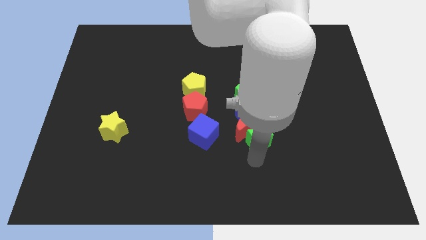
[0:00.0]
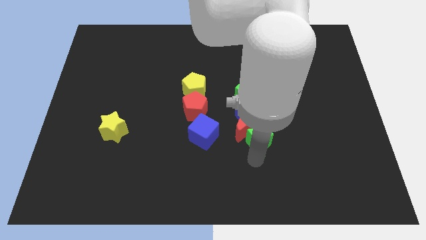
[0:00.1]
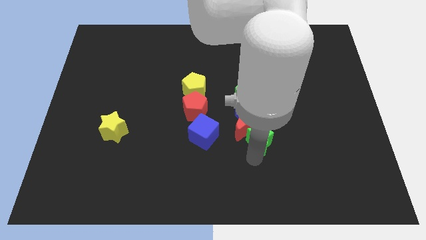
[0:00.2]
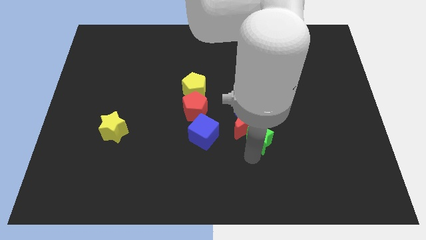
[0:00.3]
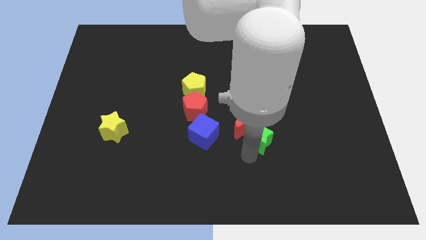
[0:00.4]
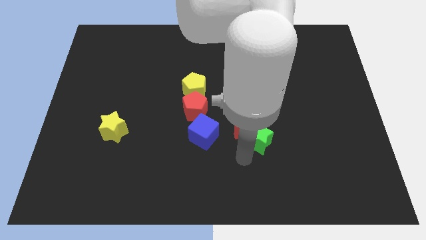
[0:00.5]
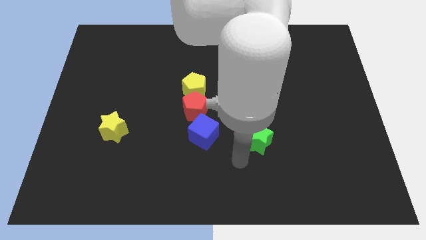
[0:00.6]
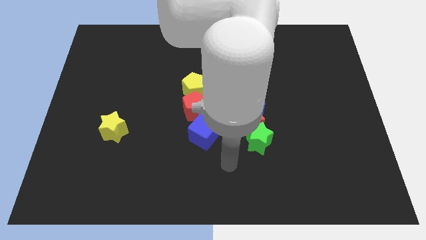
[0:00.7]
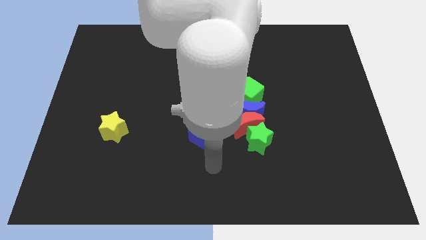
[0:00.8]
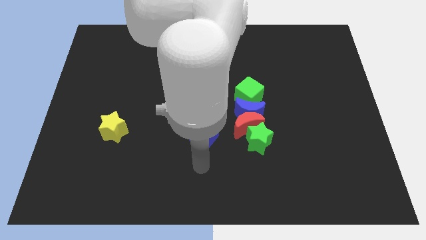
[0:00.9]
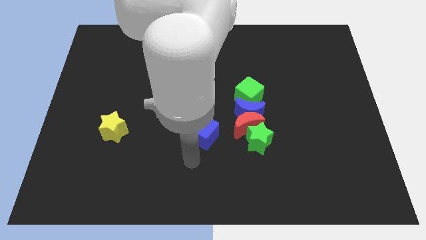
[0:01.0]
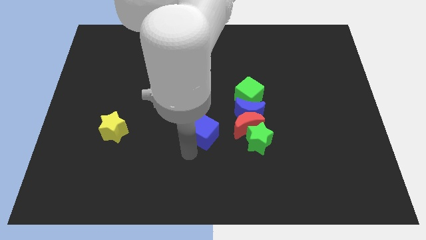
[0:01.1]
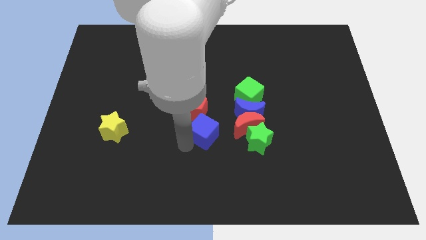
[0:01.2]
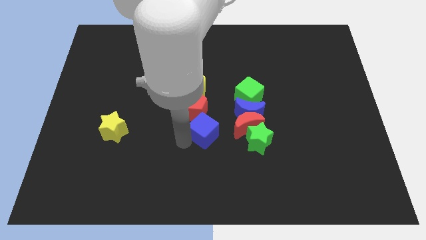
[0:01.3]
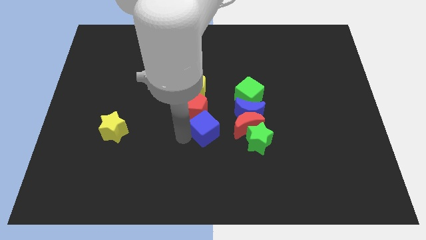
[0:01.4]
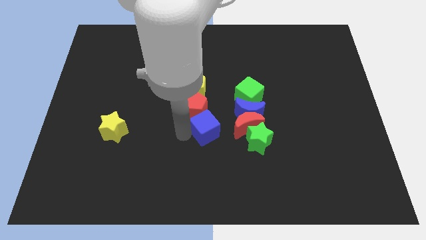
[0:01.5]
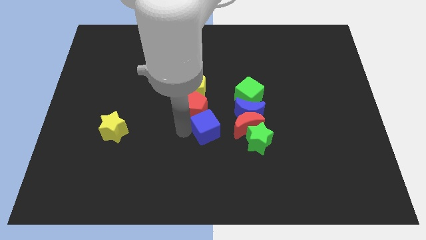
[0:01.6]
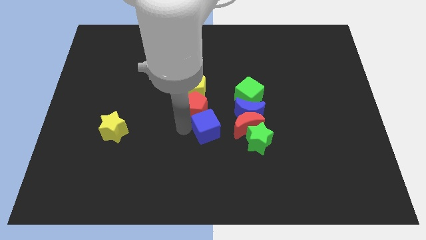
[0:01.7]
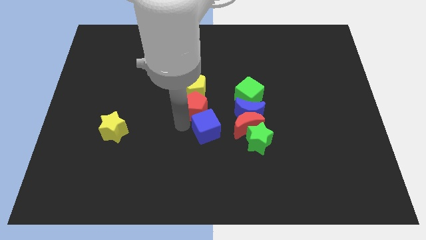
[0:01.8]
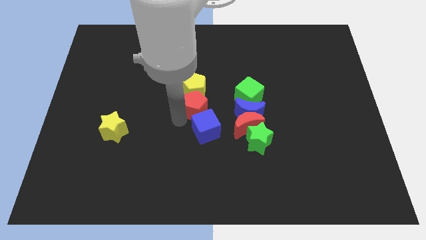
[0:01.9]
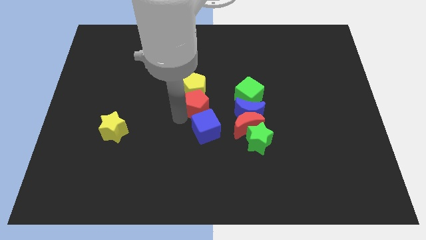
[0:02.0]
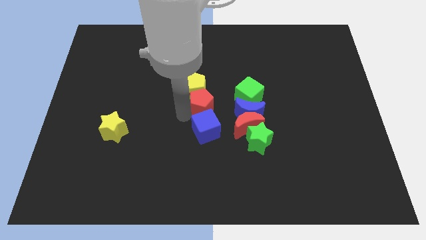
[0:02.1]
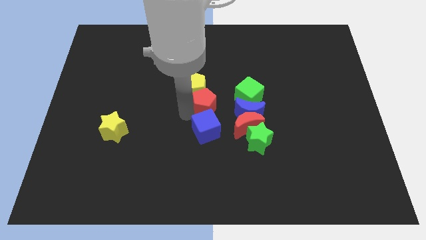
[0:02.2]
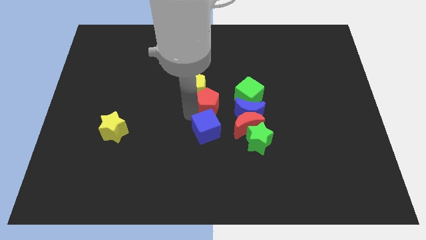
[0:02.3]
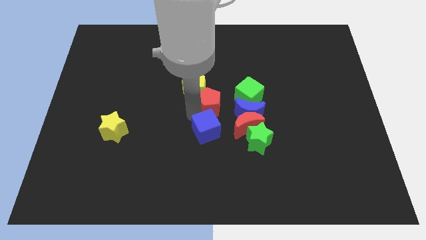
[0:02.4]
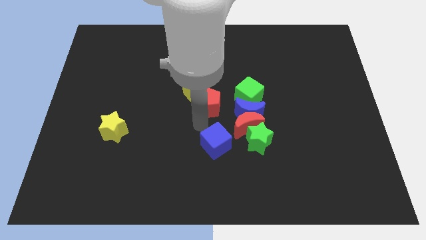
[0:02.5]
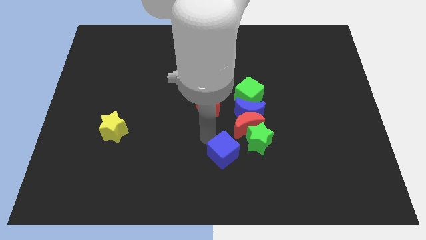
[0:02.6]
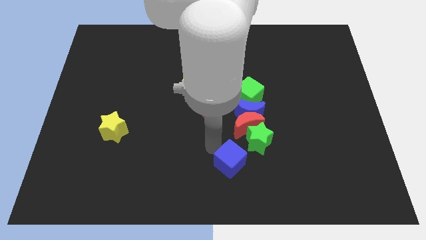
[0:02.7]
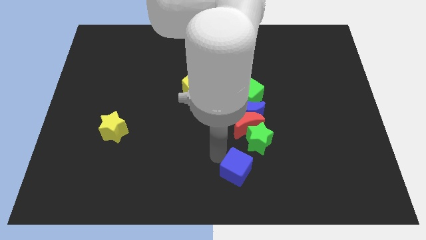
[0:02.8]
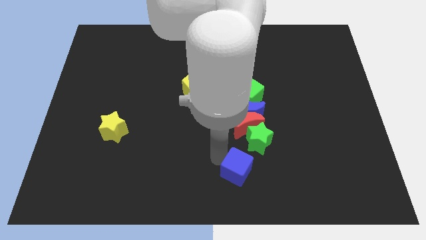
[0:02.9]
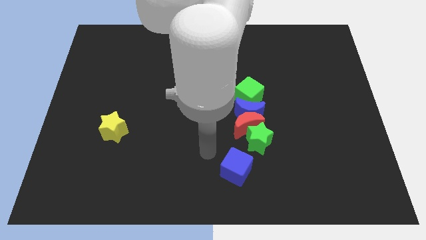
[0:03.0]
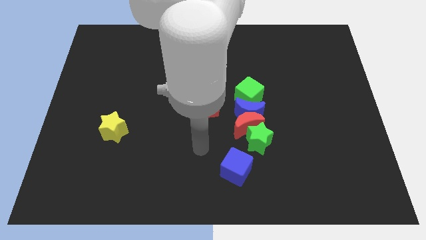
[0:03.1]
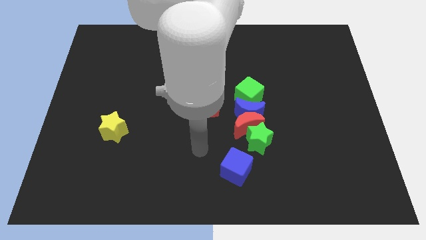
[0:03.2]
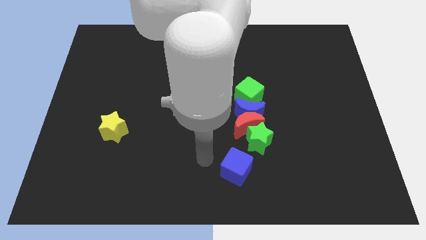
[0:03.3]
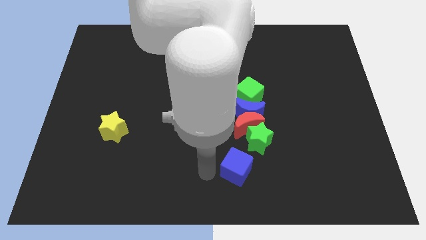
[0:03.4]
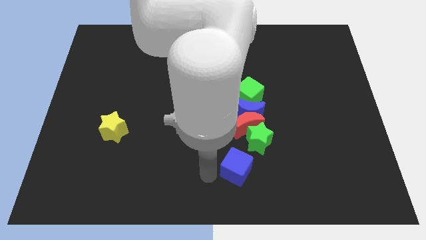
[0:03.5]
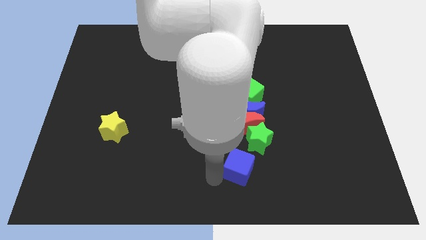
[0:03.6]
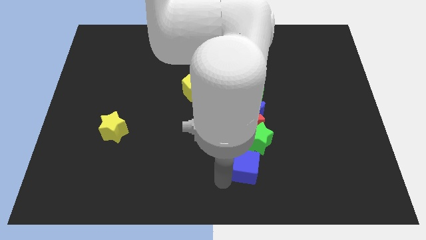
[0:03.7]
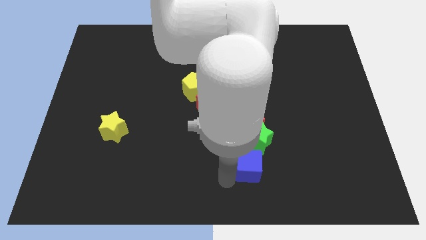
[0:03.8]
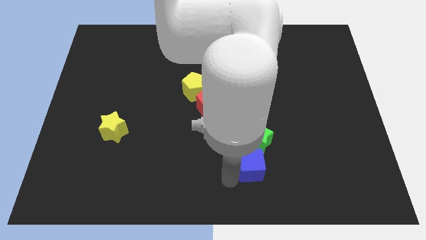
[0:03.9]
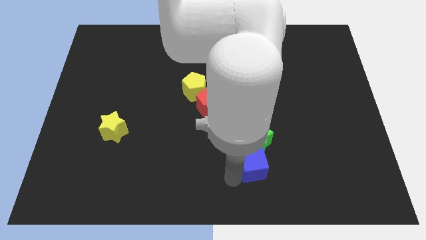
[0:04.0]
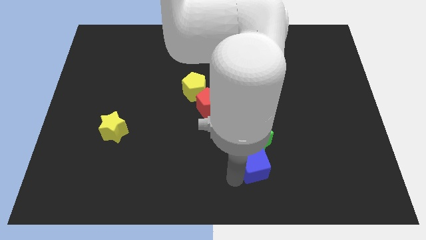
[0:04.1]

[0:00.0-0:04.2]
move the blue cube to bottom of the gren star

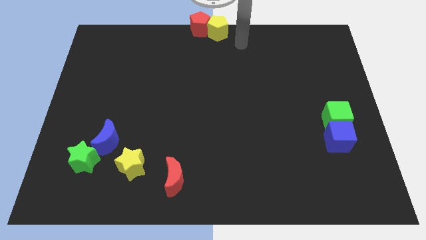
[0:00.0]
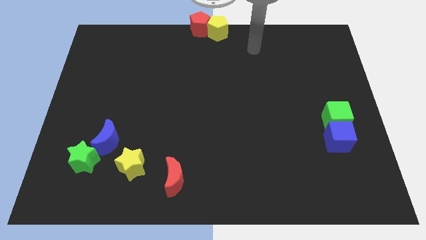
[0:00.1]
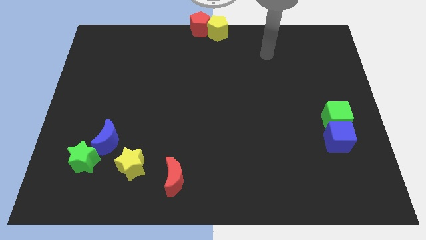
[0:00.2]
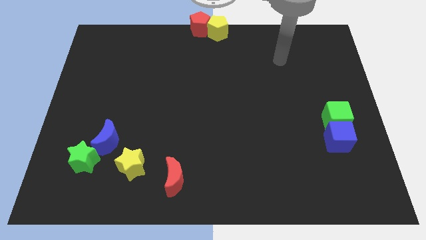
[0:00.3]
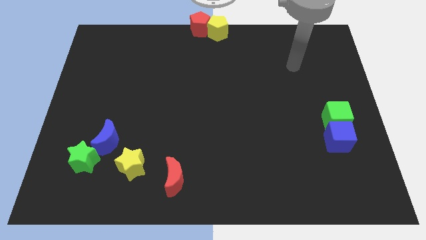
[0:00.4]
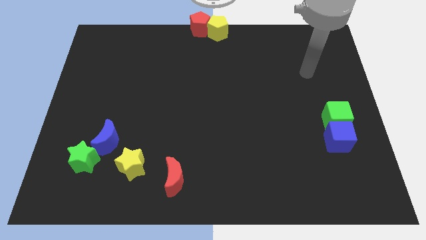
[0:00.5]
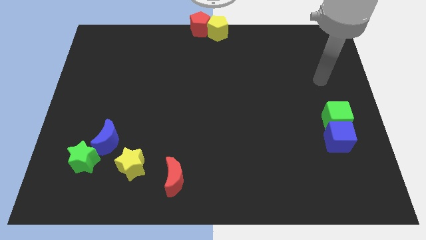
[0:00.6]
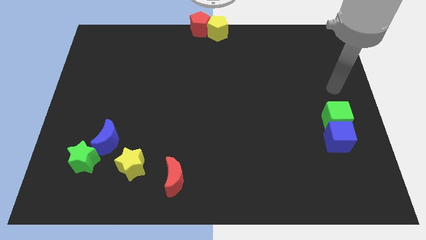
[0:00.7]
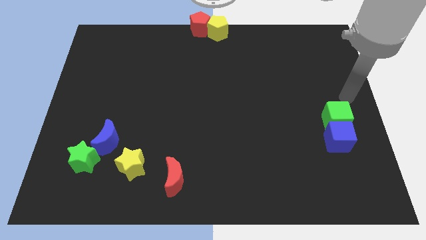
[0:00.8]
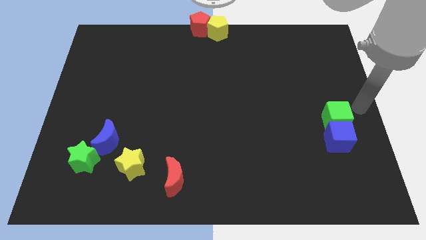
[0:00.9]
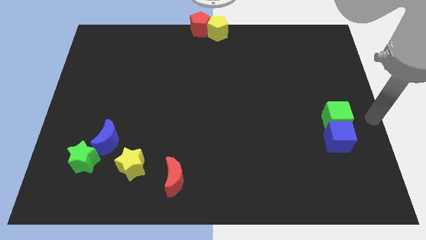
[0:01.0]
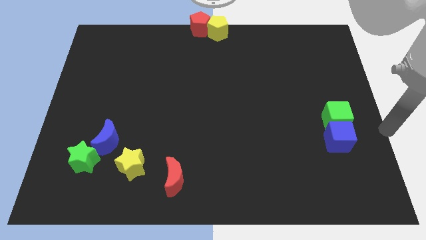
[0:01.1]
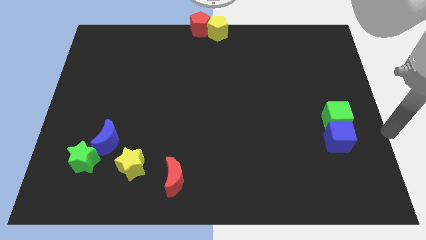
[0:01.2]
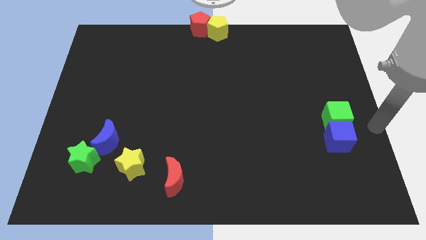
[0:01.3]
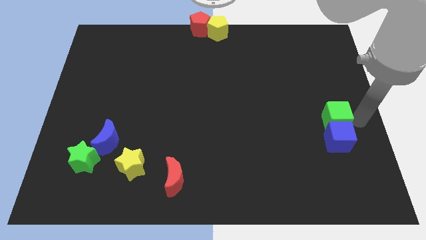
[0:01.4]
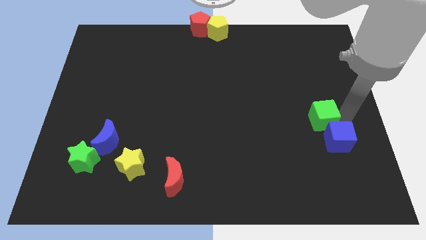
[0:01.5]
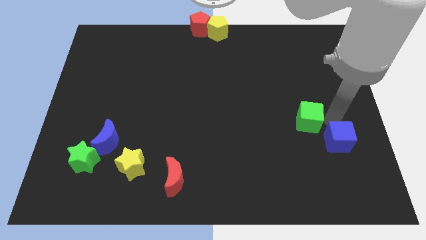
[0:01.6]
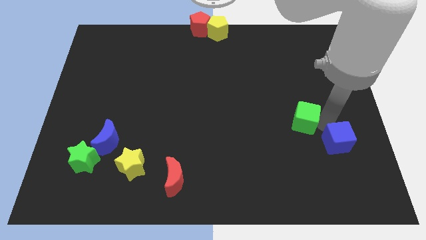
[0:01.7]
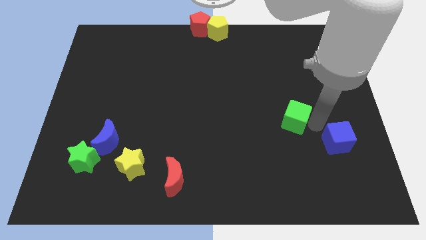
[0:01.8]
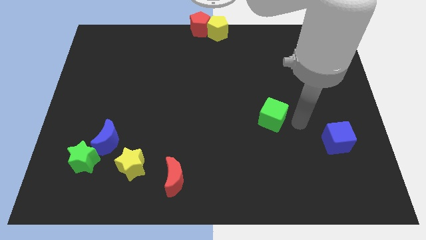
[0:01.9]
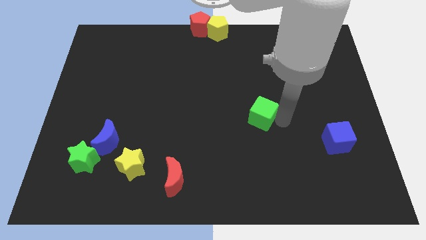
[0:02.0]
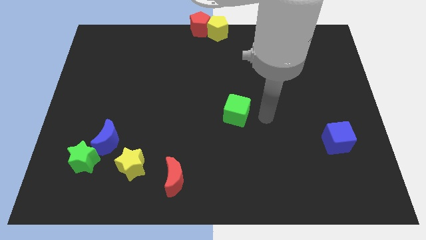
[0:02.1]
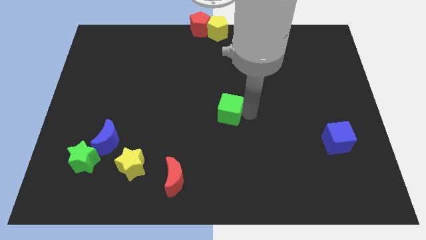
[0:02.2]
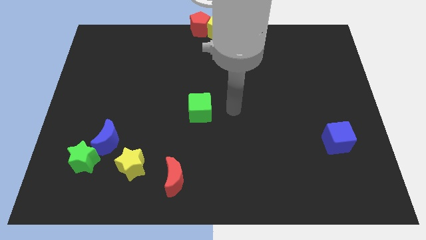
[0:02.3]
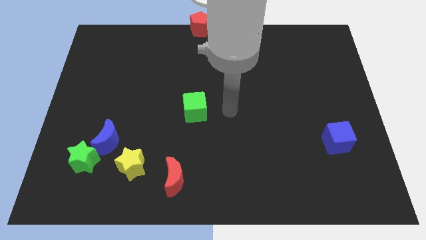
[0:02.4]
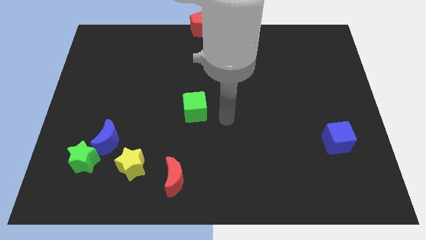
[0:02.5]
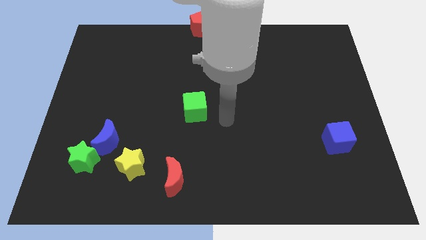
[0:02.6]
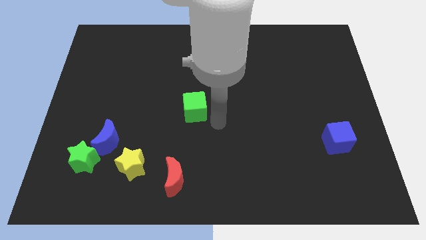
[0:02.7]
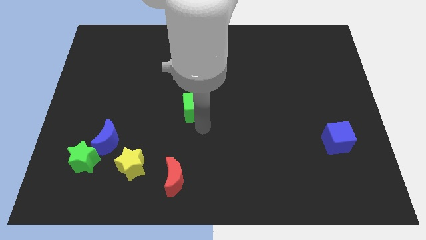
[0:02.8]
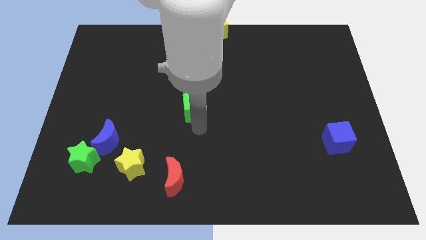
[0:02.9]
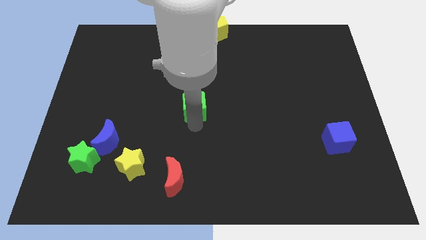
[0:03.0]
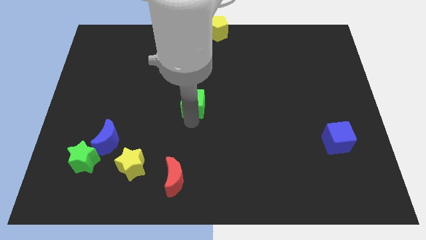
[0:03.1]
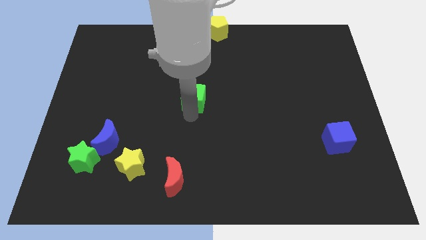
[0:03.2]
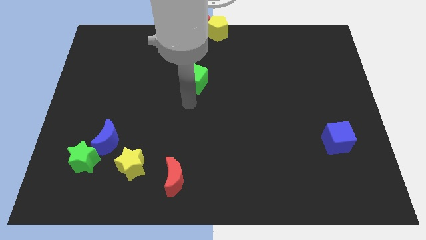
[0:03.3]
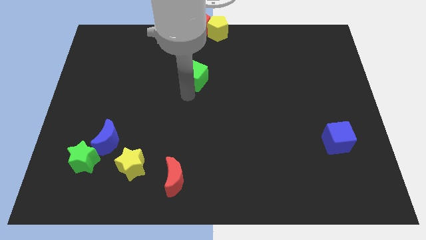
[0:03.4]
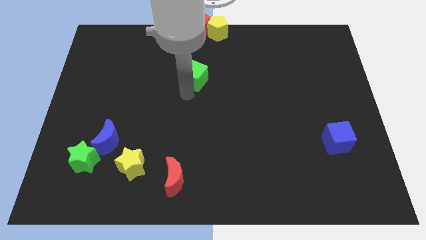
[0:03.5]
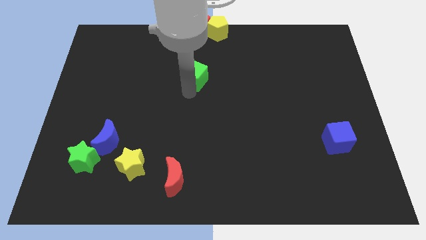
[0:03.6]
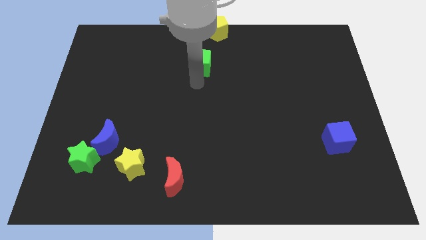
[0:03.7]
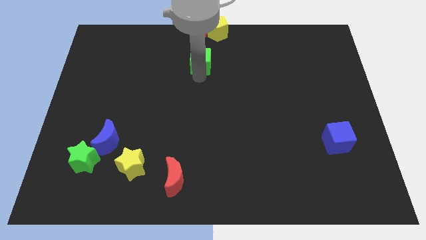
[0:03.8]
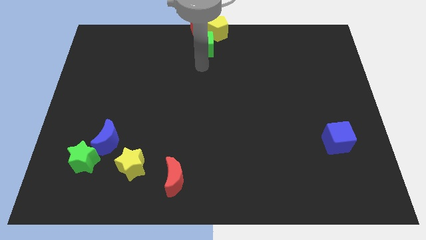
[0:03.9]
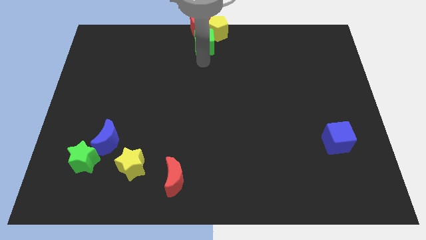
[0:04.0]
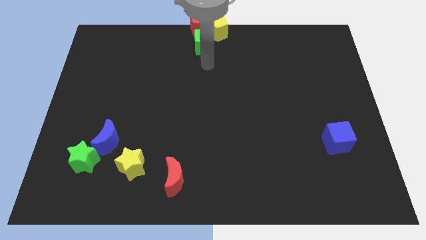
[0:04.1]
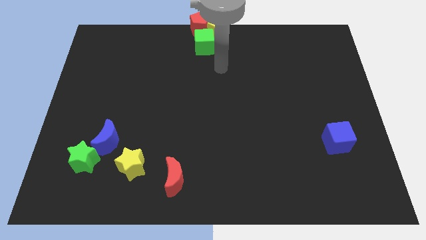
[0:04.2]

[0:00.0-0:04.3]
push the green cube to the top center of the board

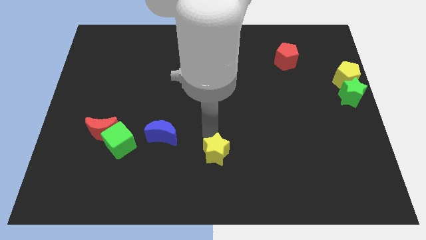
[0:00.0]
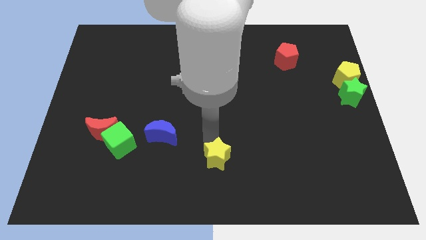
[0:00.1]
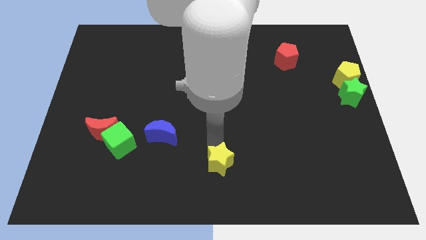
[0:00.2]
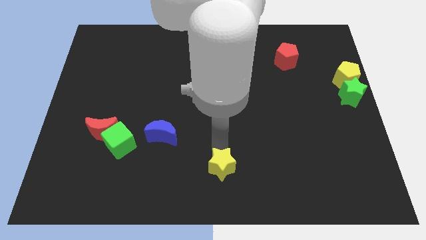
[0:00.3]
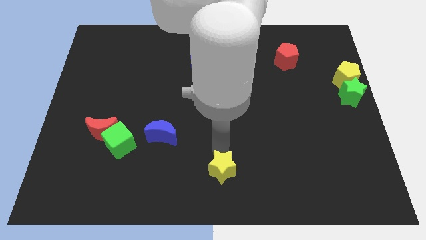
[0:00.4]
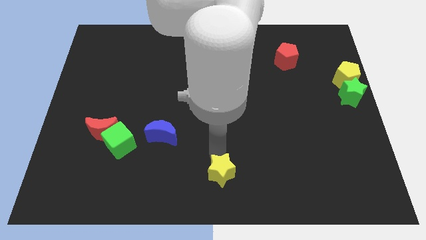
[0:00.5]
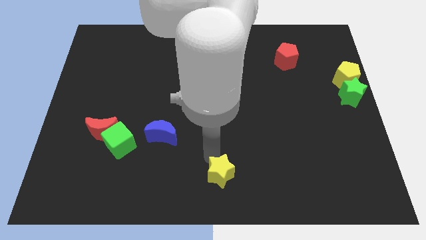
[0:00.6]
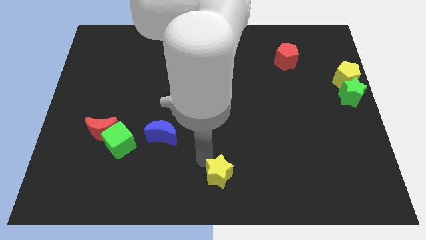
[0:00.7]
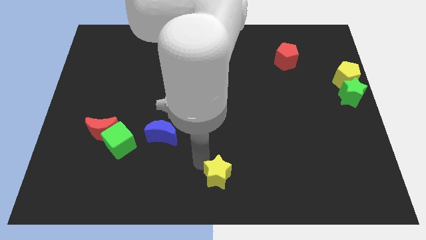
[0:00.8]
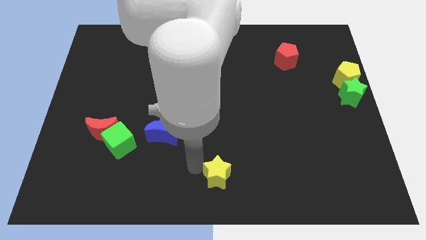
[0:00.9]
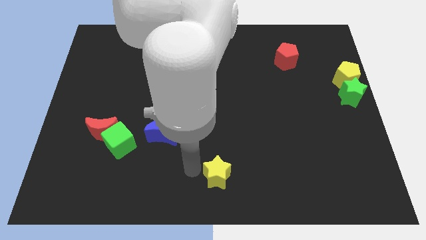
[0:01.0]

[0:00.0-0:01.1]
move the yellow star downward
